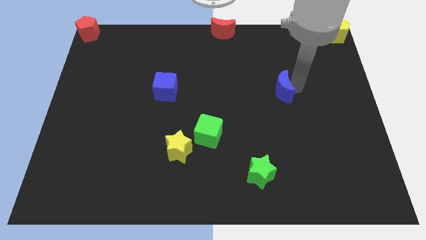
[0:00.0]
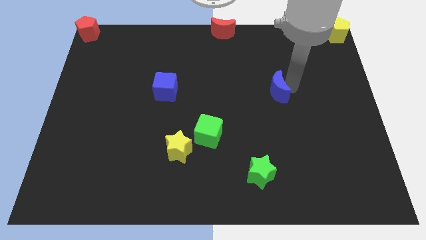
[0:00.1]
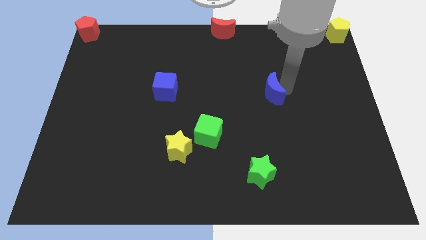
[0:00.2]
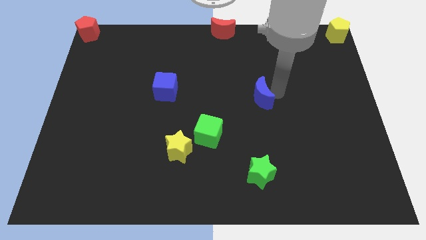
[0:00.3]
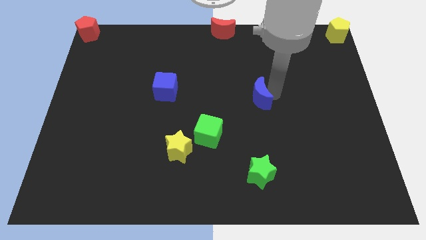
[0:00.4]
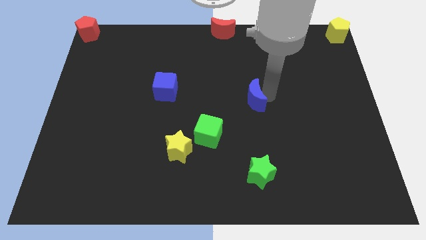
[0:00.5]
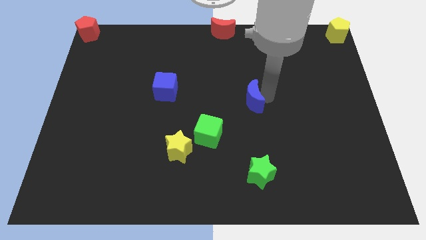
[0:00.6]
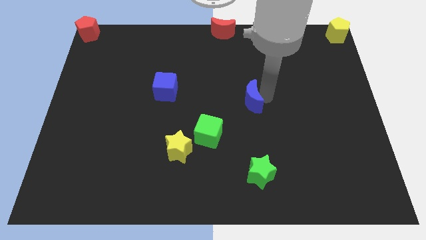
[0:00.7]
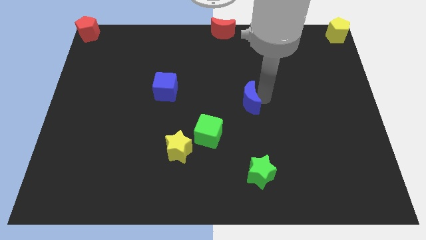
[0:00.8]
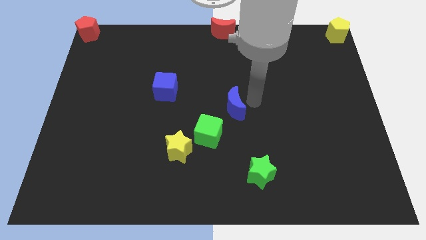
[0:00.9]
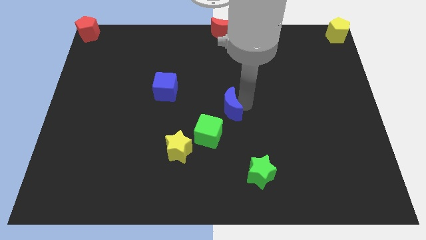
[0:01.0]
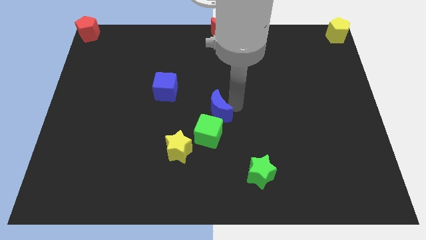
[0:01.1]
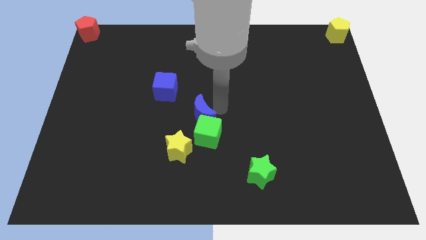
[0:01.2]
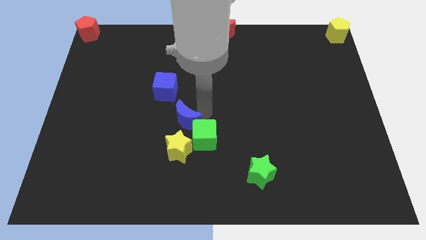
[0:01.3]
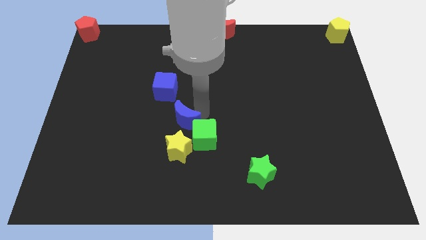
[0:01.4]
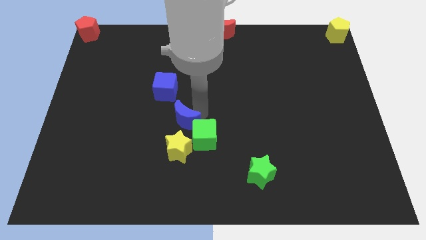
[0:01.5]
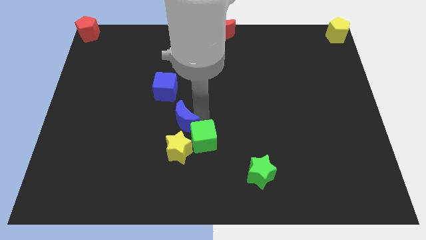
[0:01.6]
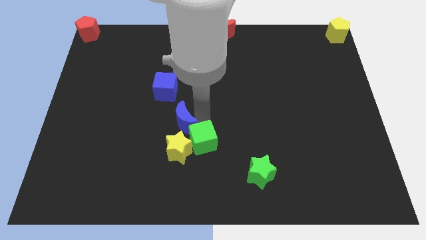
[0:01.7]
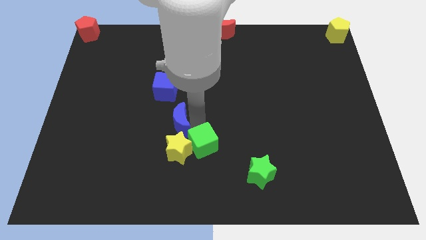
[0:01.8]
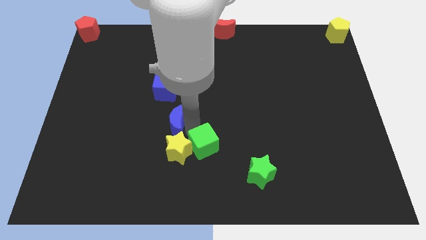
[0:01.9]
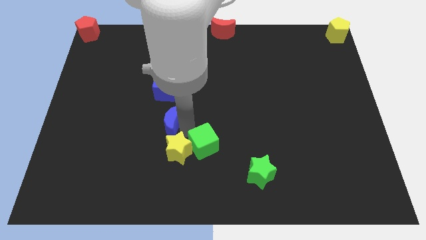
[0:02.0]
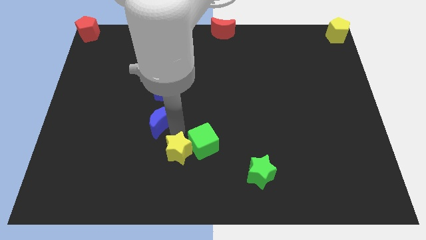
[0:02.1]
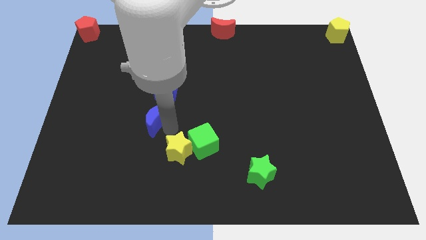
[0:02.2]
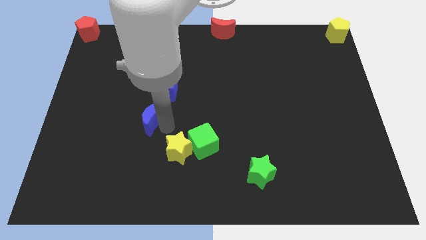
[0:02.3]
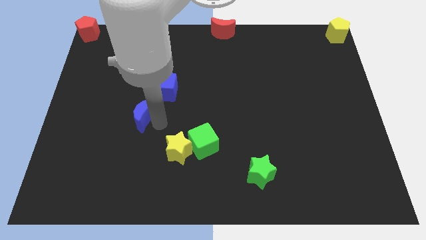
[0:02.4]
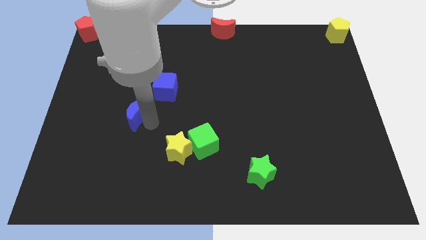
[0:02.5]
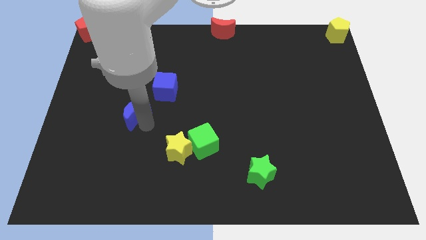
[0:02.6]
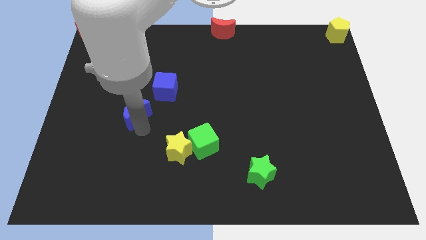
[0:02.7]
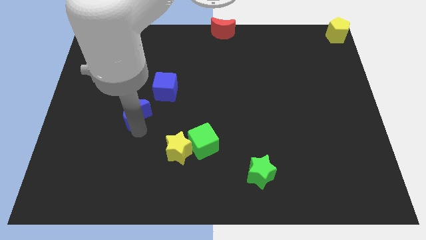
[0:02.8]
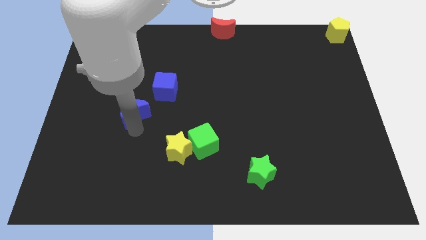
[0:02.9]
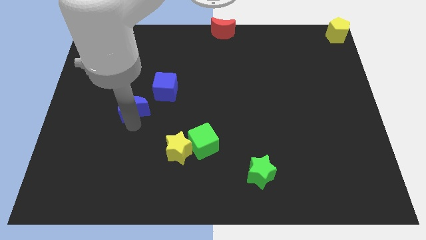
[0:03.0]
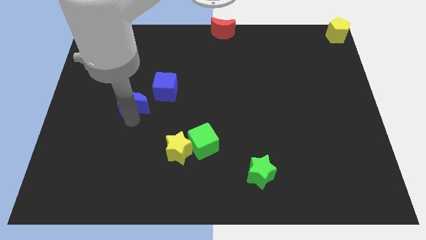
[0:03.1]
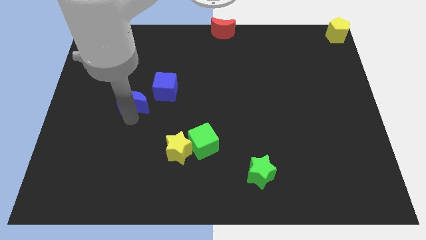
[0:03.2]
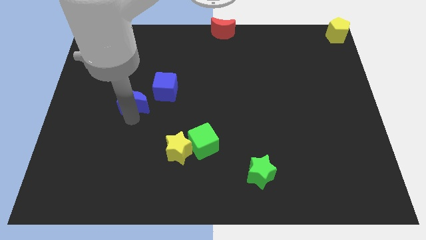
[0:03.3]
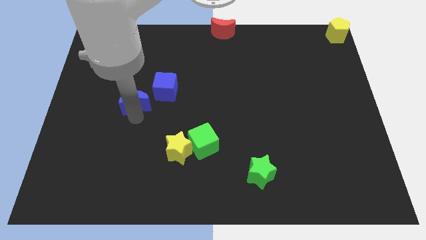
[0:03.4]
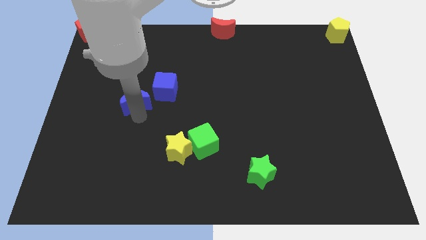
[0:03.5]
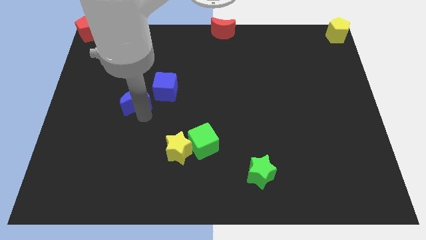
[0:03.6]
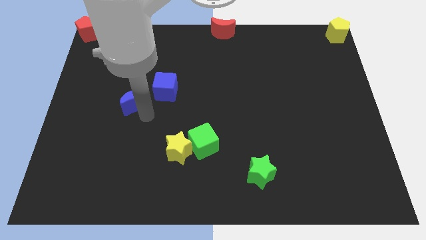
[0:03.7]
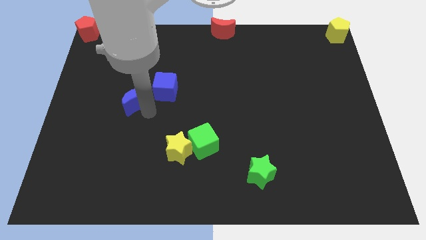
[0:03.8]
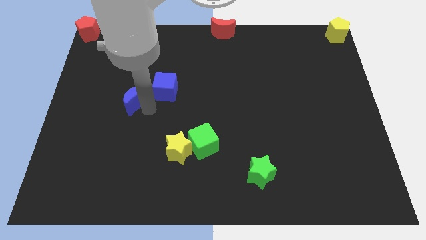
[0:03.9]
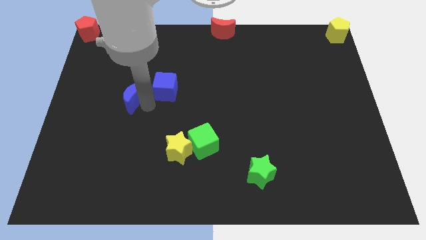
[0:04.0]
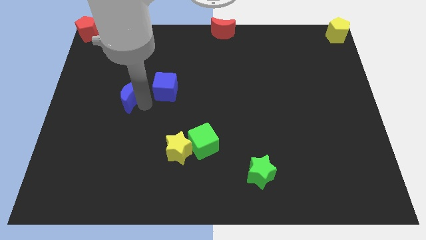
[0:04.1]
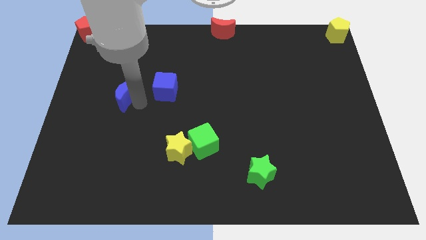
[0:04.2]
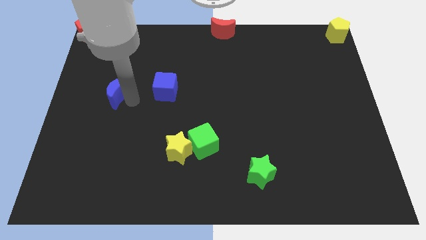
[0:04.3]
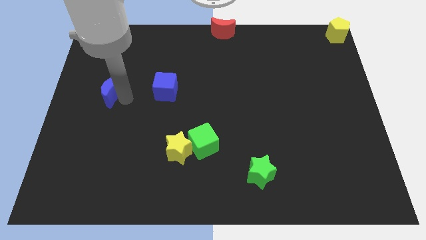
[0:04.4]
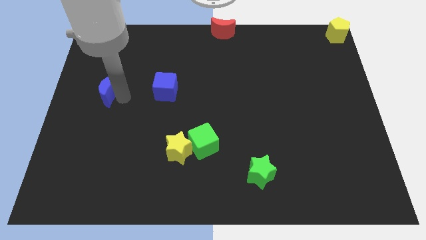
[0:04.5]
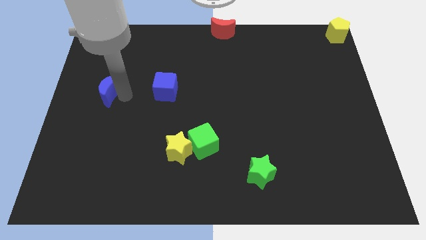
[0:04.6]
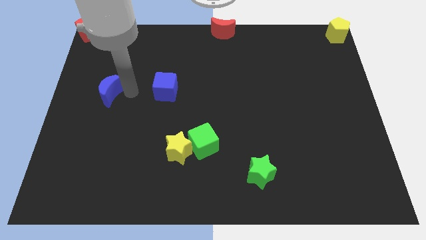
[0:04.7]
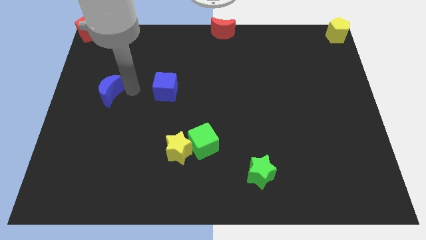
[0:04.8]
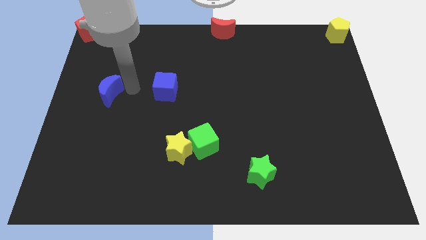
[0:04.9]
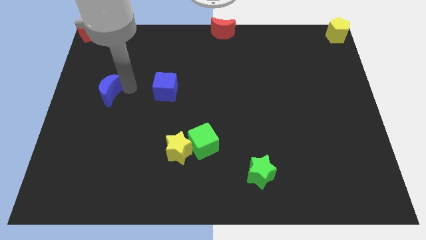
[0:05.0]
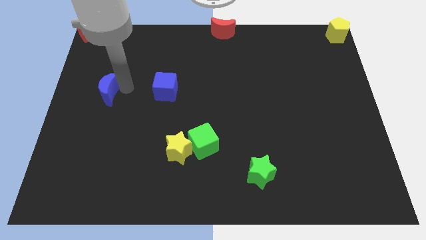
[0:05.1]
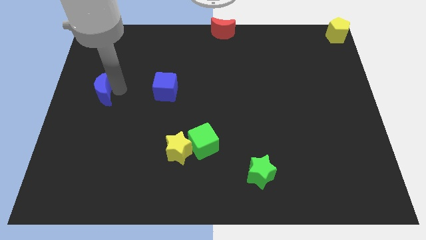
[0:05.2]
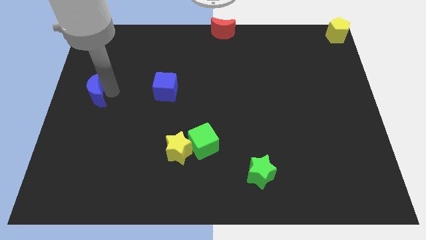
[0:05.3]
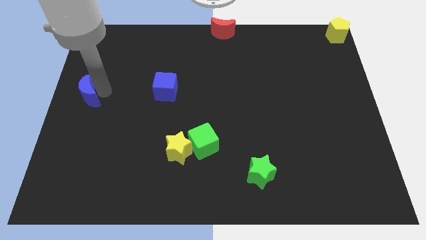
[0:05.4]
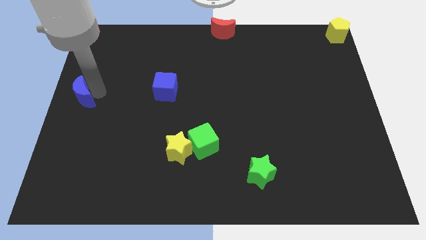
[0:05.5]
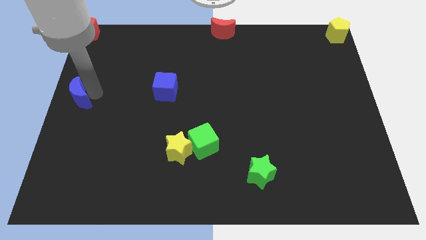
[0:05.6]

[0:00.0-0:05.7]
move blue crescent towards the left center of the board

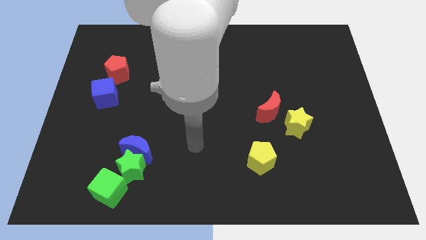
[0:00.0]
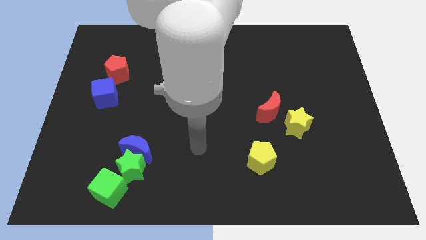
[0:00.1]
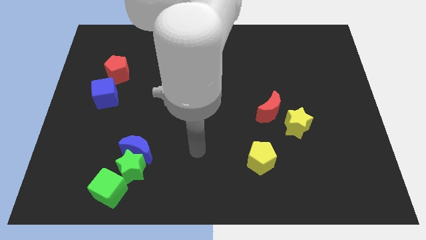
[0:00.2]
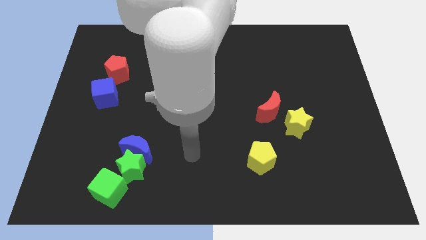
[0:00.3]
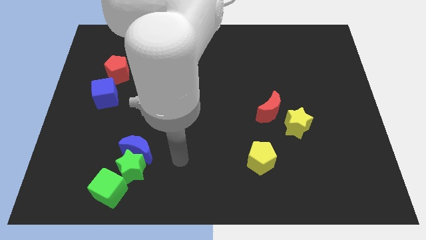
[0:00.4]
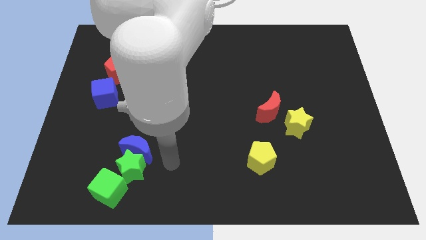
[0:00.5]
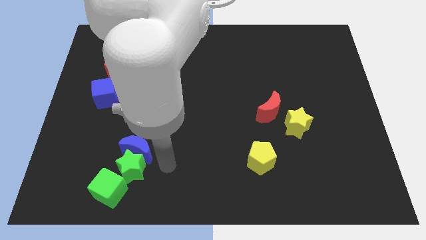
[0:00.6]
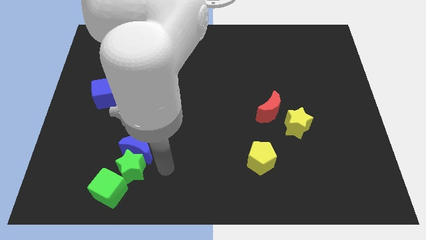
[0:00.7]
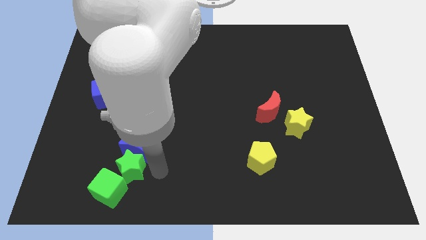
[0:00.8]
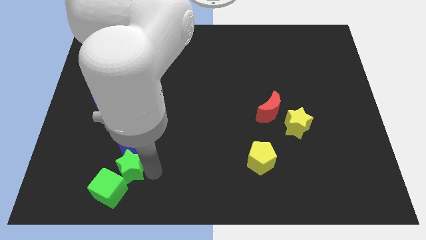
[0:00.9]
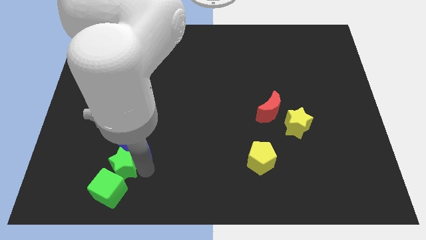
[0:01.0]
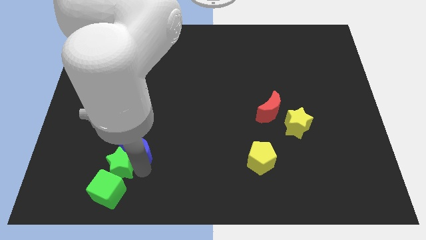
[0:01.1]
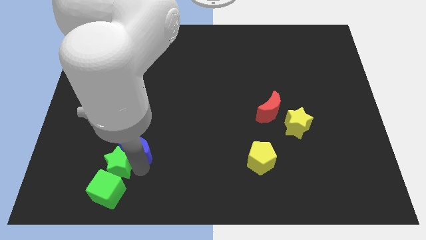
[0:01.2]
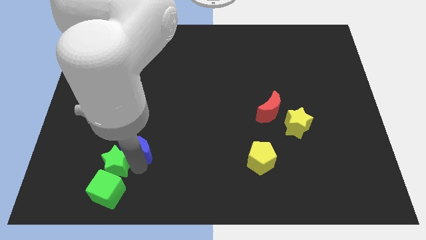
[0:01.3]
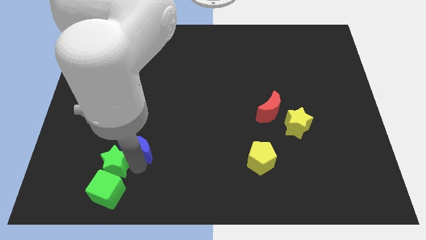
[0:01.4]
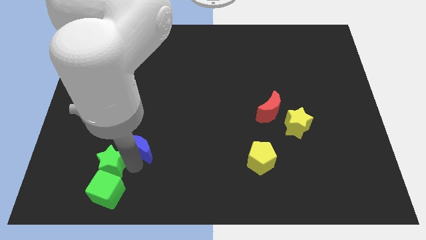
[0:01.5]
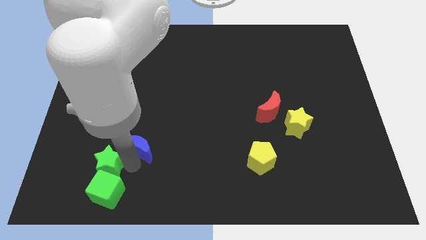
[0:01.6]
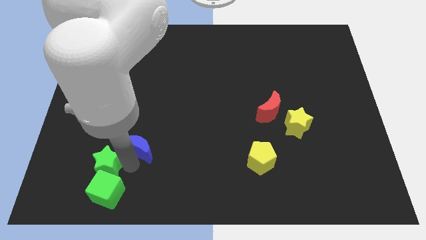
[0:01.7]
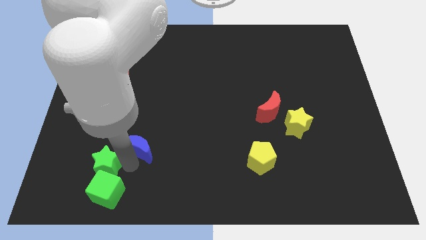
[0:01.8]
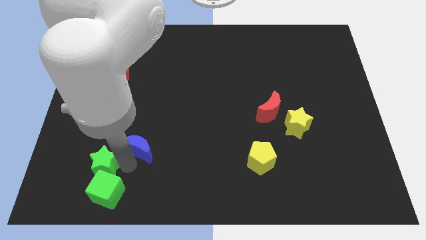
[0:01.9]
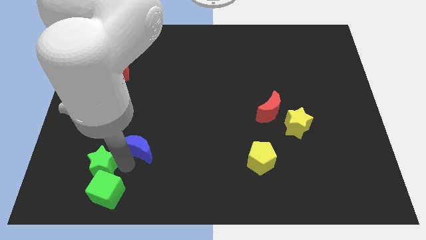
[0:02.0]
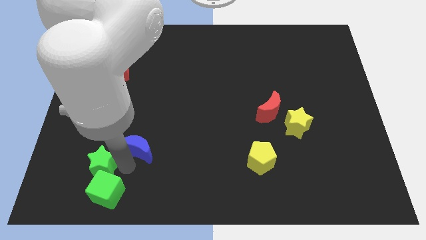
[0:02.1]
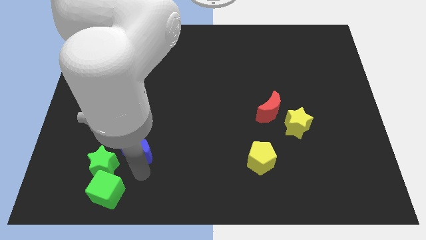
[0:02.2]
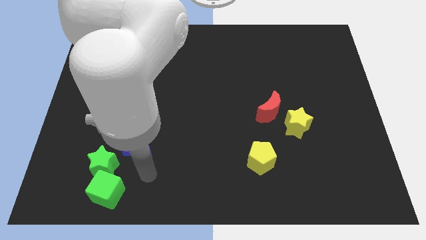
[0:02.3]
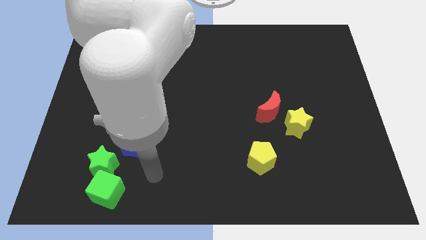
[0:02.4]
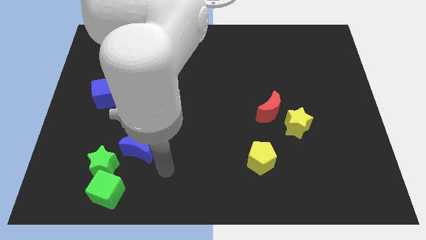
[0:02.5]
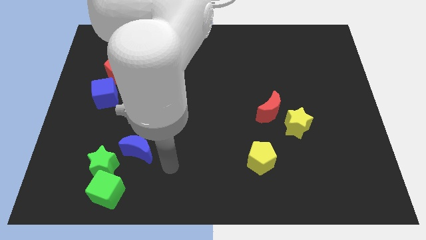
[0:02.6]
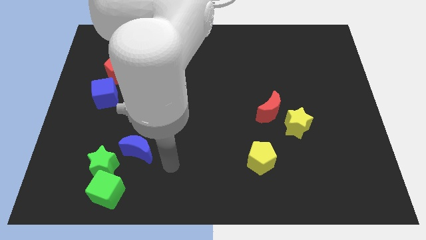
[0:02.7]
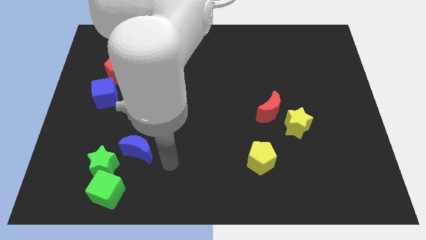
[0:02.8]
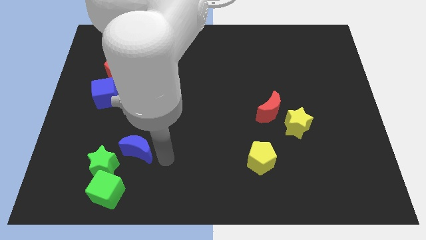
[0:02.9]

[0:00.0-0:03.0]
move the green star slightly to the top left of the green cube

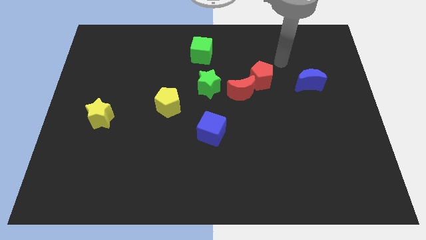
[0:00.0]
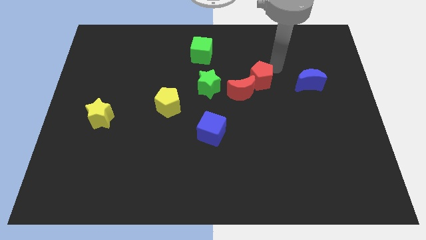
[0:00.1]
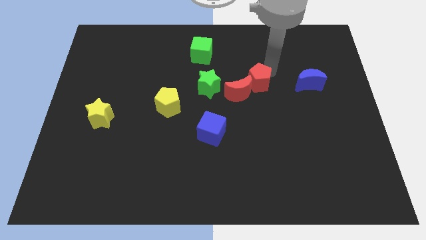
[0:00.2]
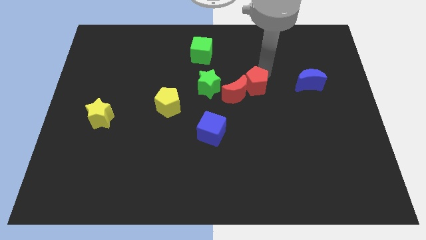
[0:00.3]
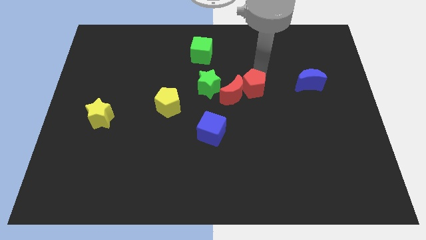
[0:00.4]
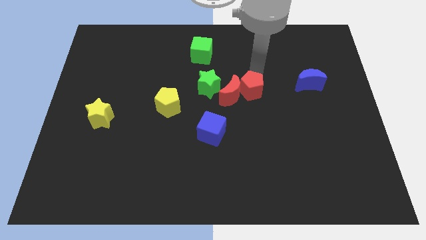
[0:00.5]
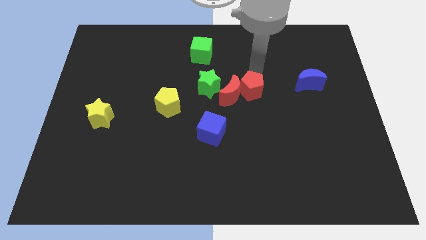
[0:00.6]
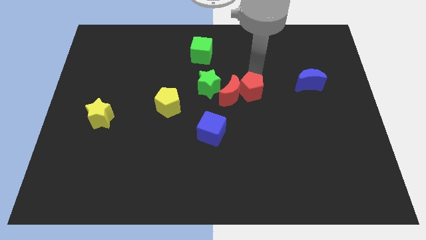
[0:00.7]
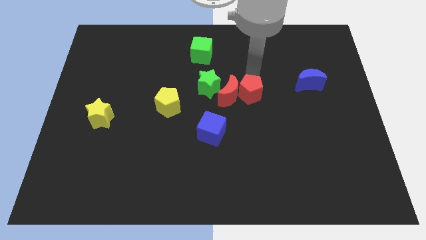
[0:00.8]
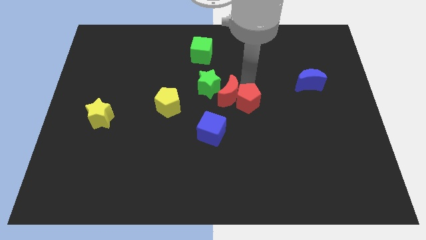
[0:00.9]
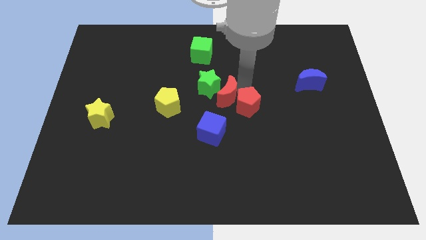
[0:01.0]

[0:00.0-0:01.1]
put the red pentagon at the bottom right of the red crescent
